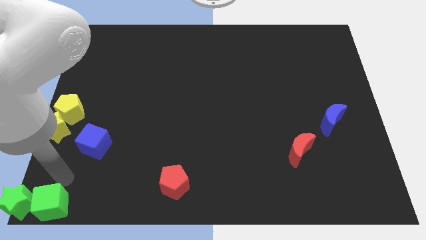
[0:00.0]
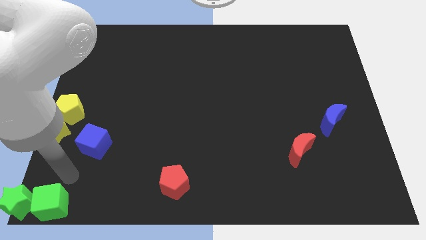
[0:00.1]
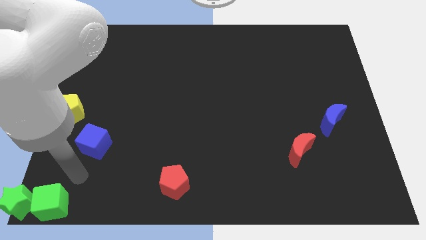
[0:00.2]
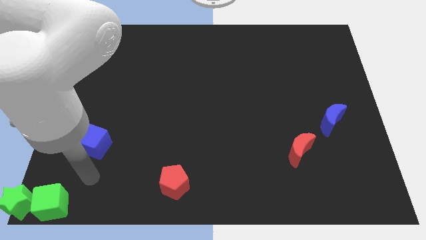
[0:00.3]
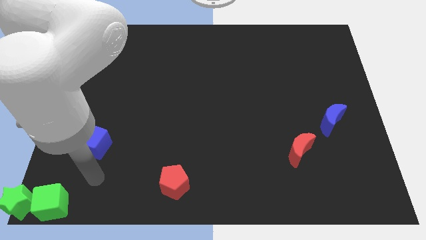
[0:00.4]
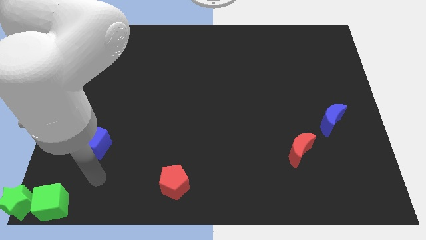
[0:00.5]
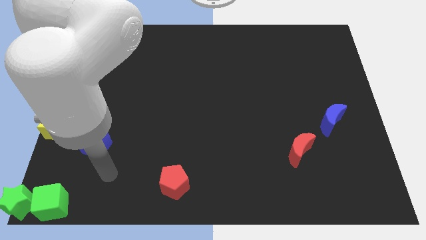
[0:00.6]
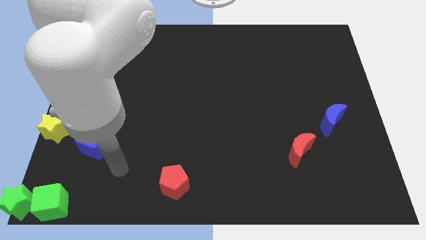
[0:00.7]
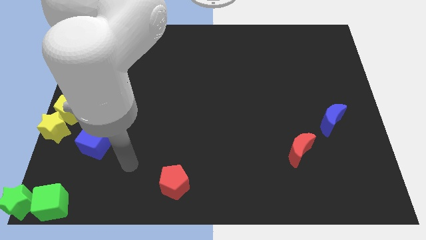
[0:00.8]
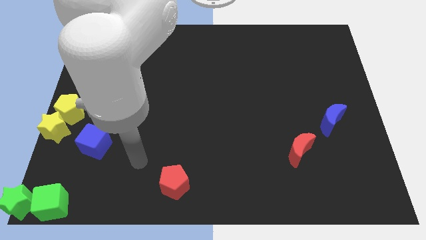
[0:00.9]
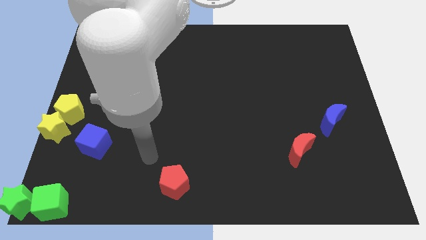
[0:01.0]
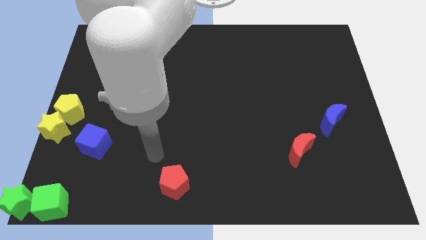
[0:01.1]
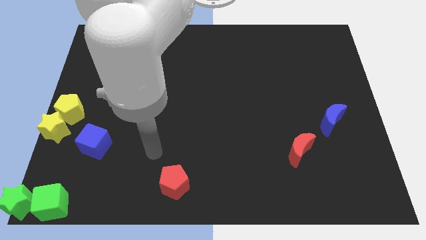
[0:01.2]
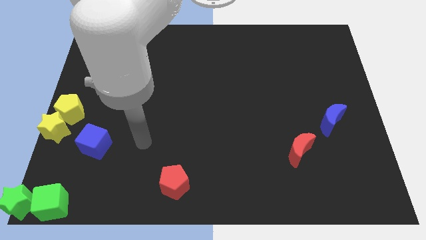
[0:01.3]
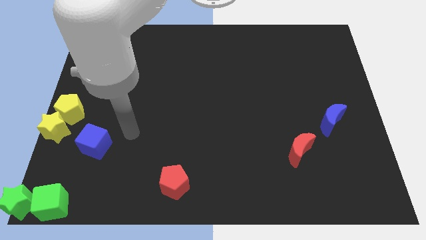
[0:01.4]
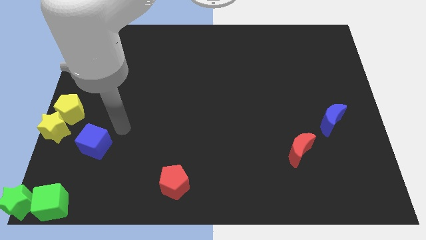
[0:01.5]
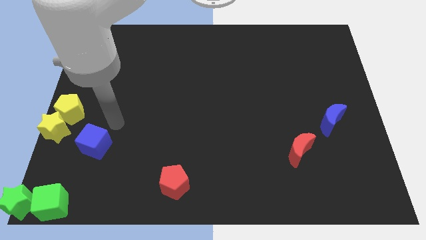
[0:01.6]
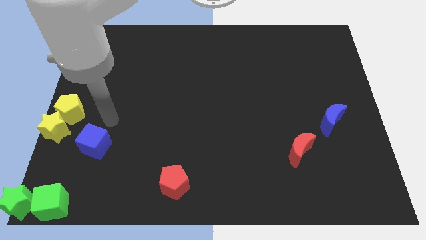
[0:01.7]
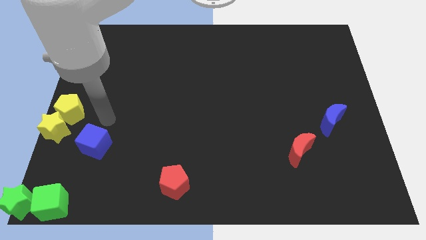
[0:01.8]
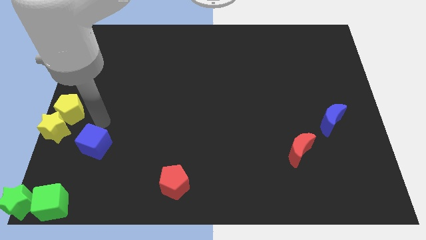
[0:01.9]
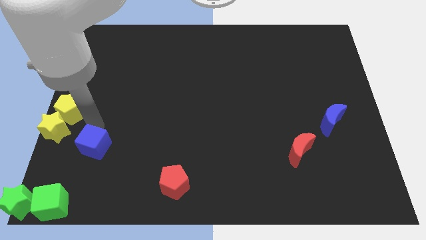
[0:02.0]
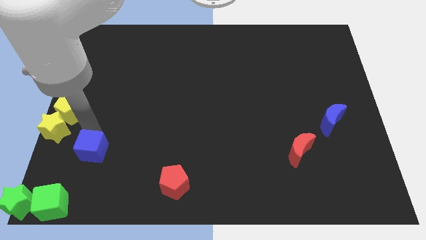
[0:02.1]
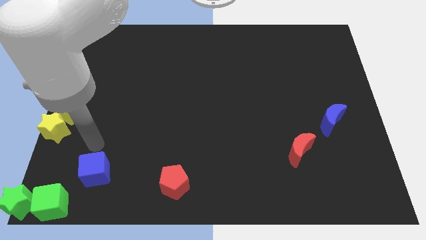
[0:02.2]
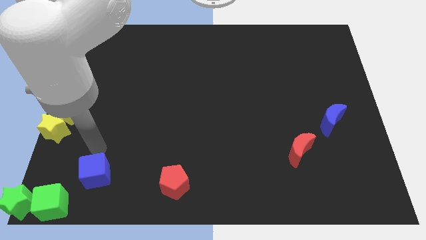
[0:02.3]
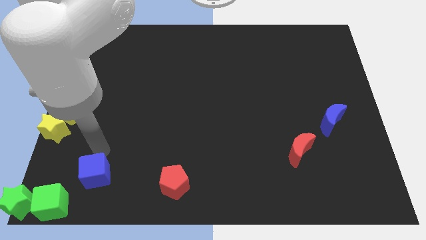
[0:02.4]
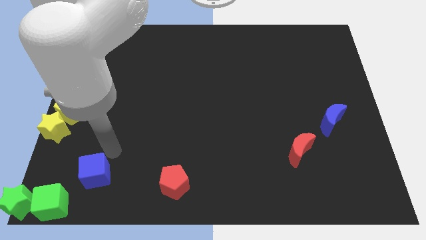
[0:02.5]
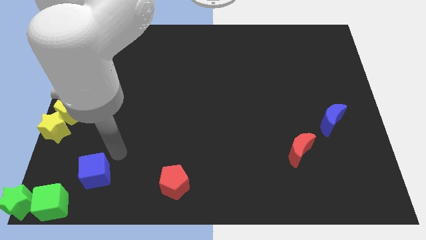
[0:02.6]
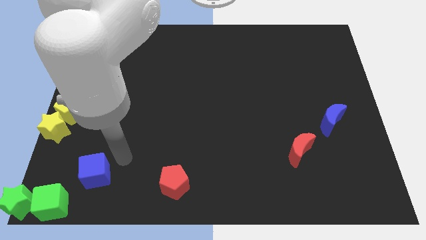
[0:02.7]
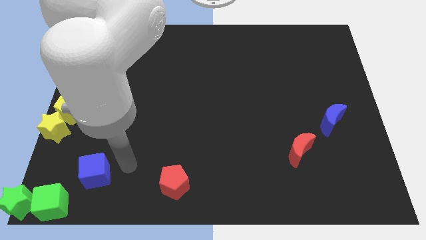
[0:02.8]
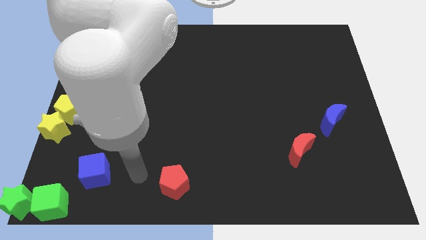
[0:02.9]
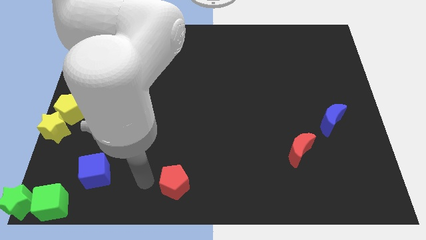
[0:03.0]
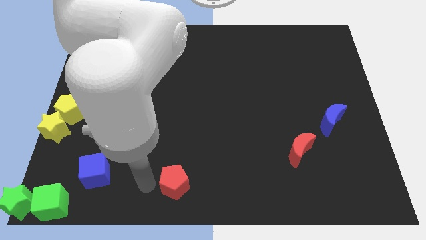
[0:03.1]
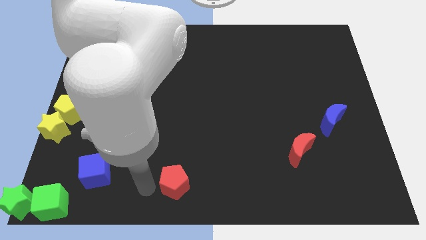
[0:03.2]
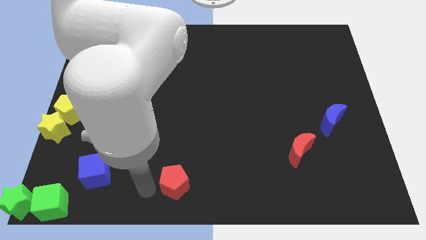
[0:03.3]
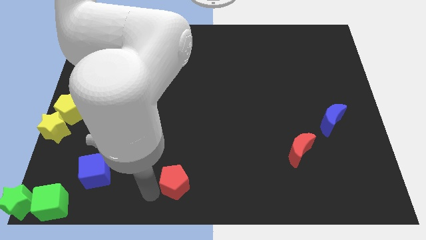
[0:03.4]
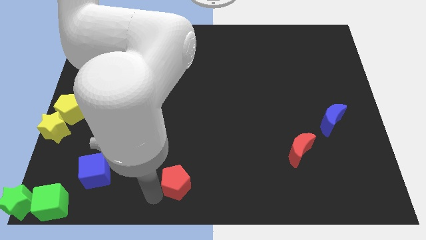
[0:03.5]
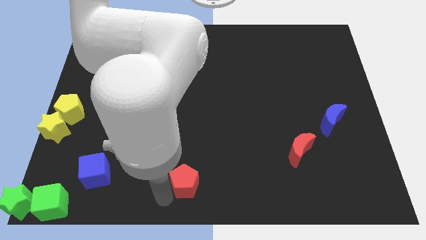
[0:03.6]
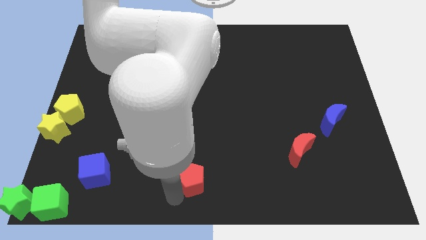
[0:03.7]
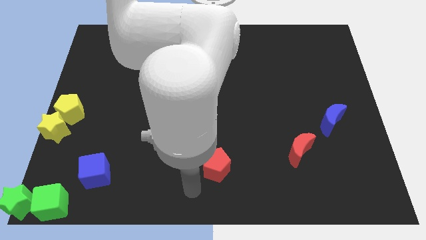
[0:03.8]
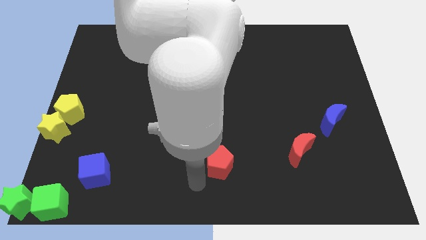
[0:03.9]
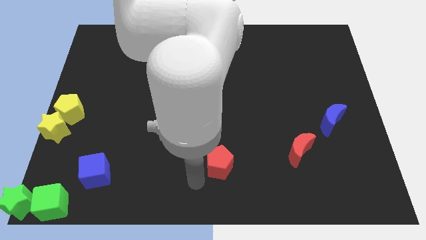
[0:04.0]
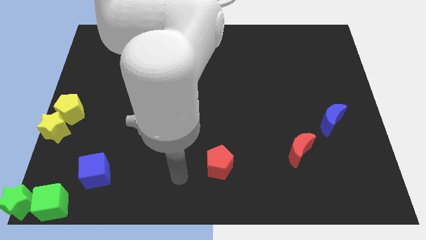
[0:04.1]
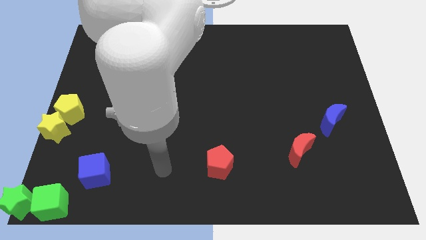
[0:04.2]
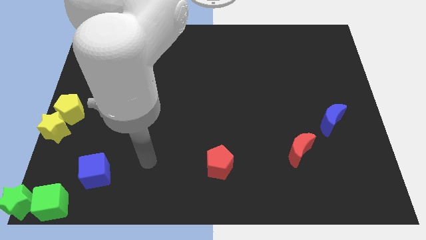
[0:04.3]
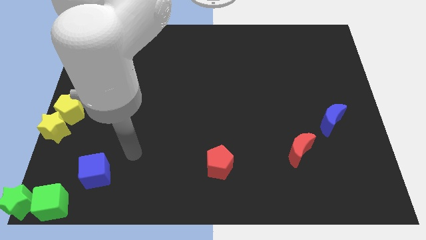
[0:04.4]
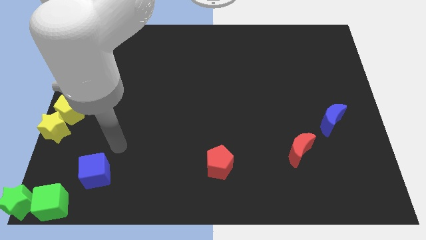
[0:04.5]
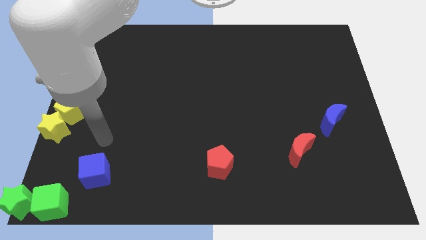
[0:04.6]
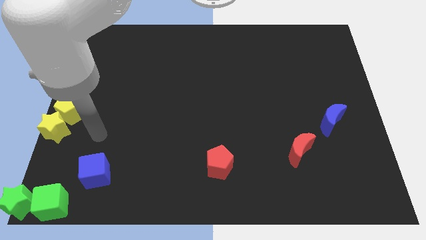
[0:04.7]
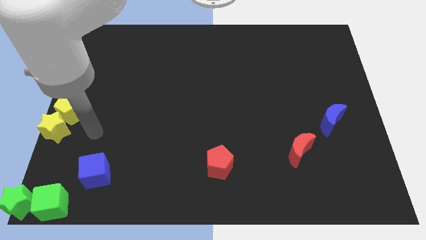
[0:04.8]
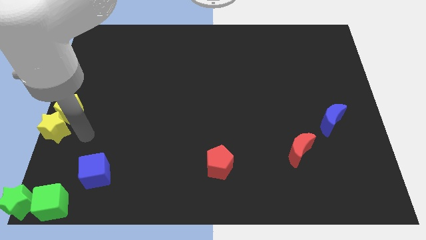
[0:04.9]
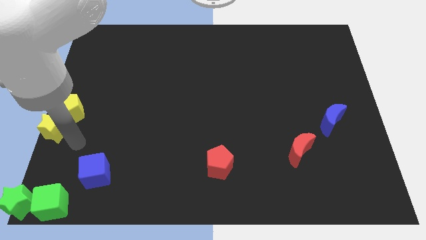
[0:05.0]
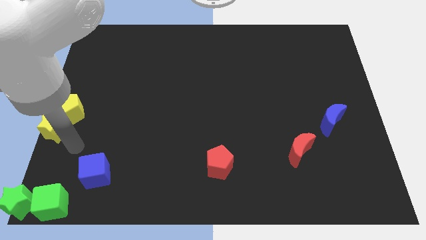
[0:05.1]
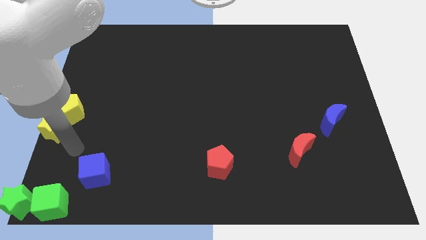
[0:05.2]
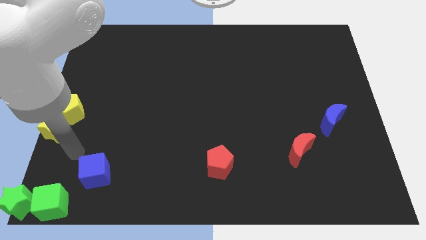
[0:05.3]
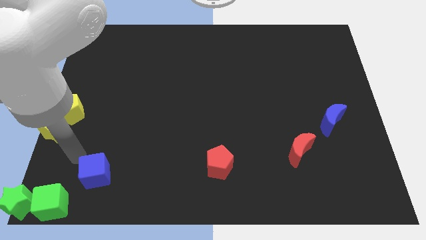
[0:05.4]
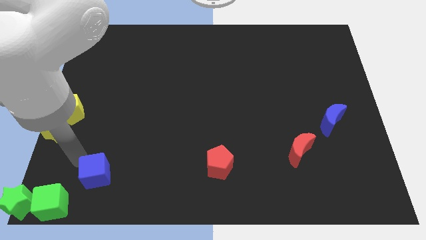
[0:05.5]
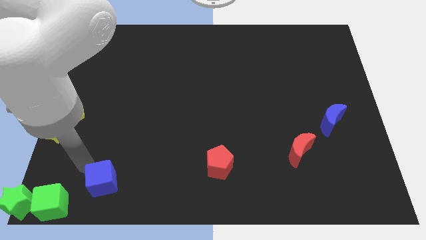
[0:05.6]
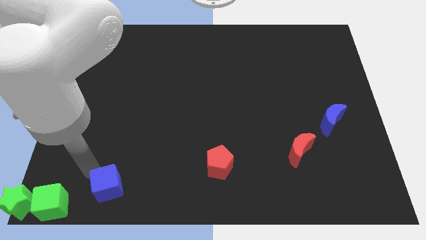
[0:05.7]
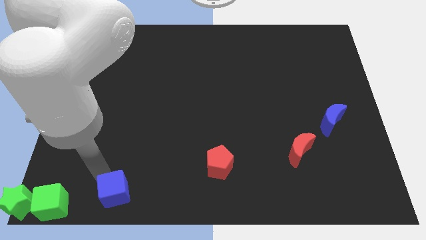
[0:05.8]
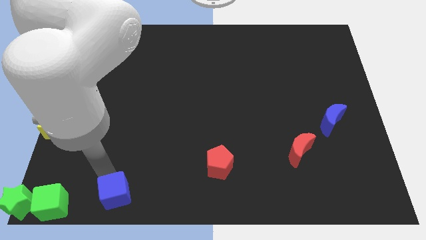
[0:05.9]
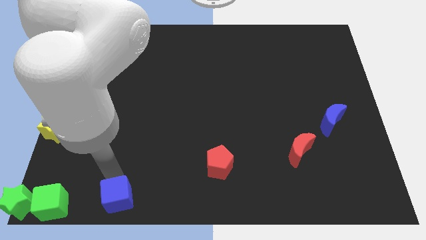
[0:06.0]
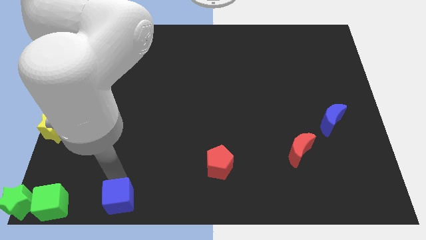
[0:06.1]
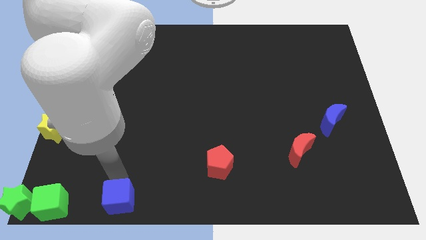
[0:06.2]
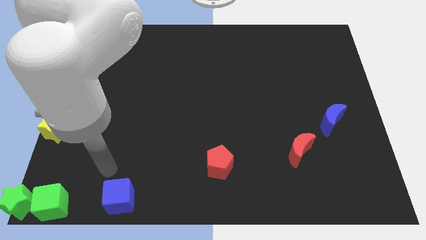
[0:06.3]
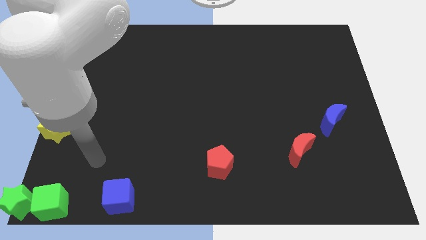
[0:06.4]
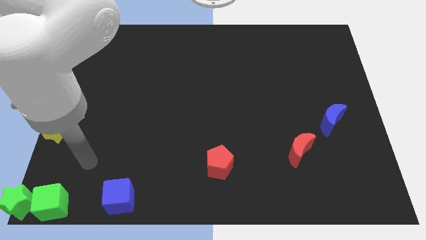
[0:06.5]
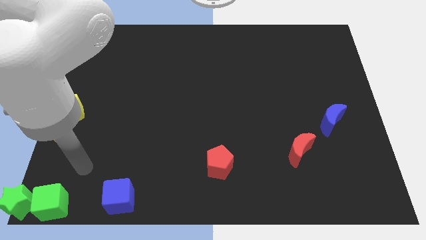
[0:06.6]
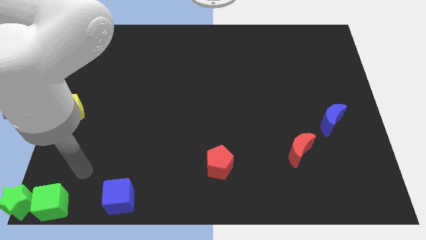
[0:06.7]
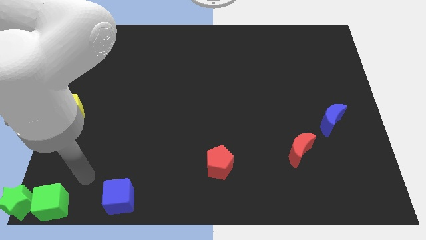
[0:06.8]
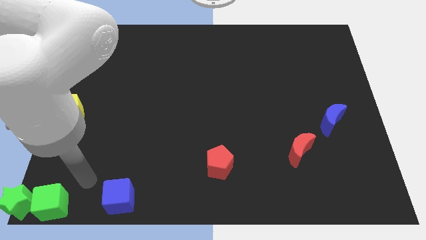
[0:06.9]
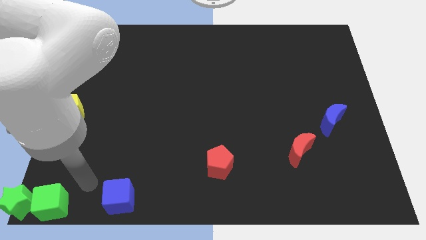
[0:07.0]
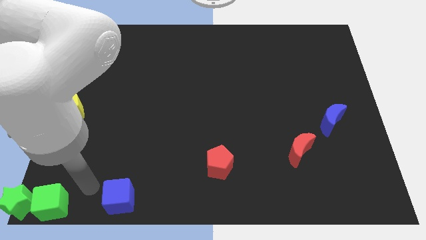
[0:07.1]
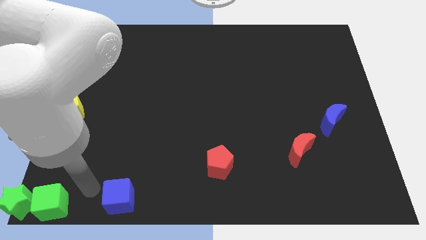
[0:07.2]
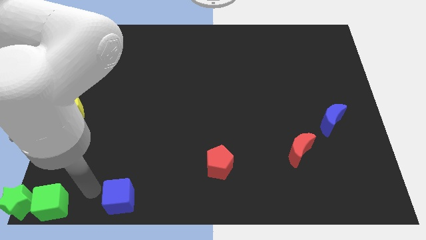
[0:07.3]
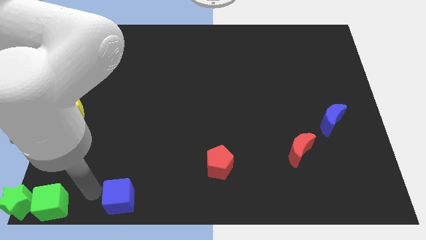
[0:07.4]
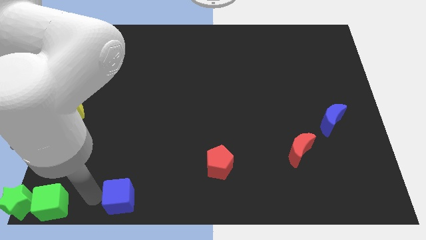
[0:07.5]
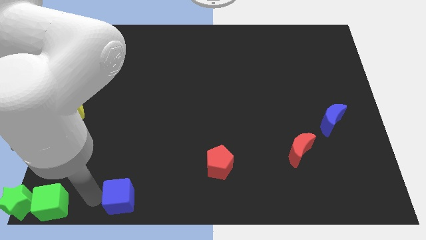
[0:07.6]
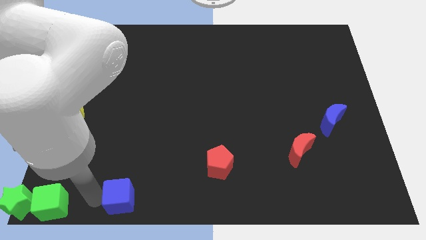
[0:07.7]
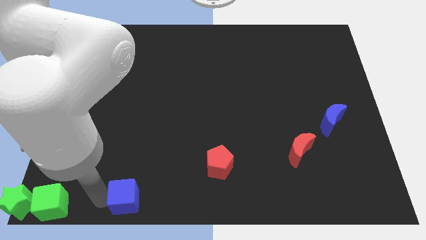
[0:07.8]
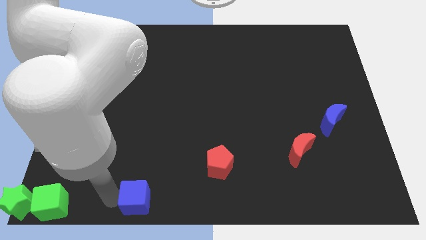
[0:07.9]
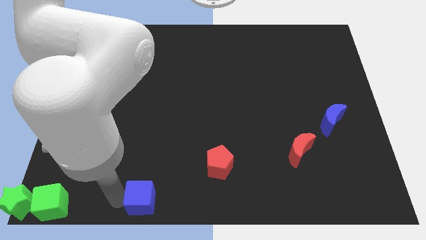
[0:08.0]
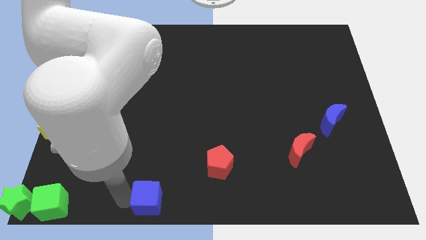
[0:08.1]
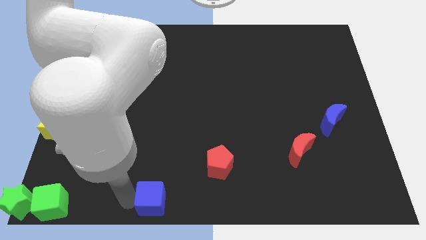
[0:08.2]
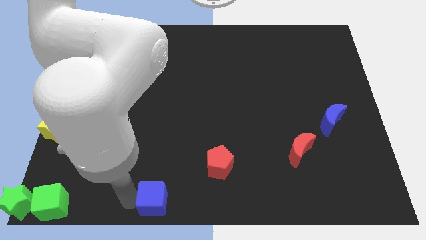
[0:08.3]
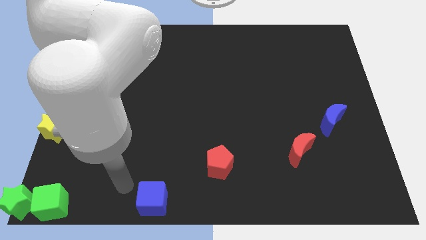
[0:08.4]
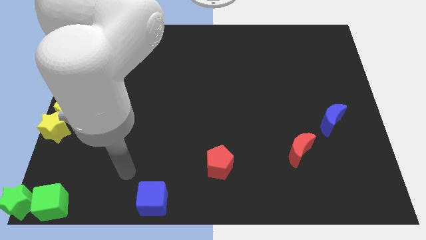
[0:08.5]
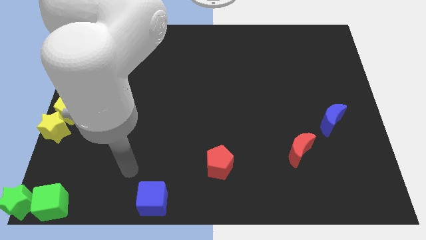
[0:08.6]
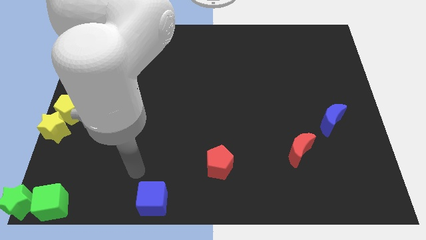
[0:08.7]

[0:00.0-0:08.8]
push the blue cube to the bottom center

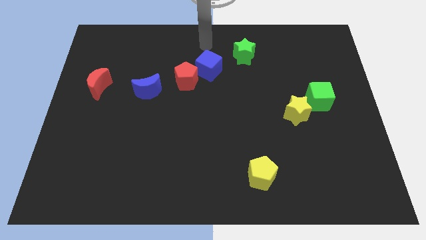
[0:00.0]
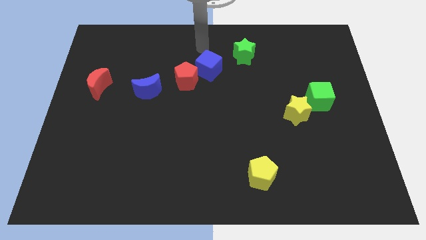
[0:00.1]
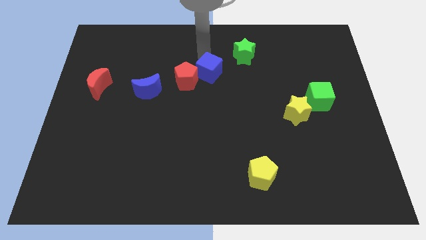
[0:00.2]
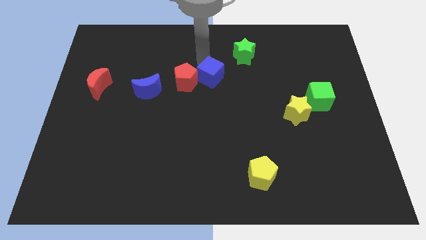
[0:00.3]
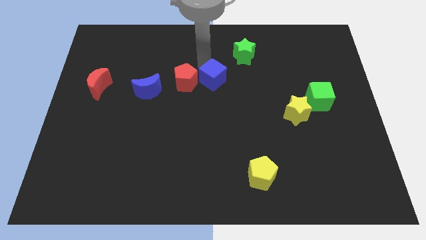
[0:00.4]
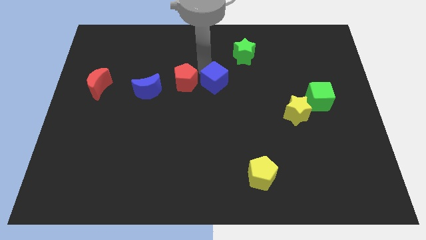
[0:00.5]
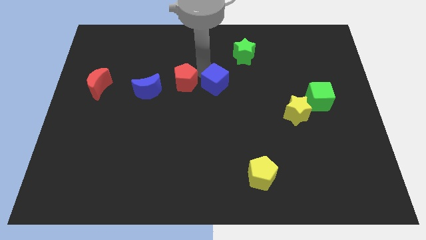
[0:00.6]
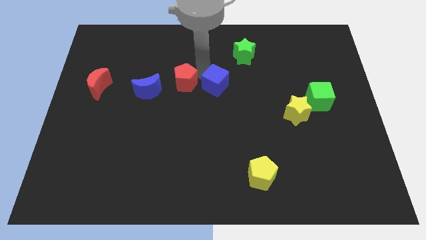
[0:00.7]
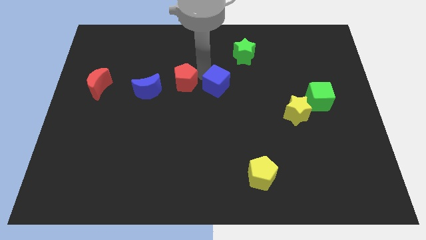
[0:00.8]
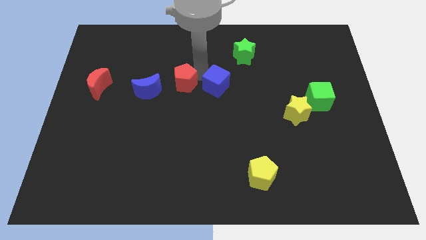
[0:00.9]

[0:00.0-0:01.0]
place blue cube to the center
